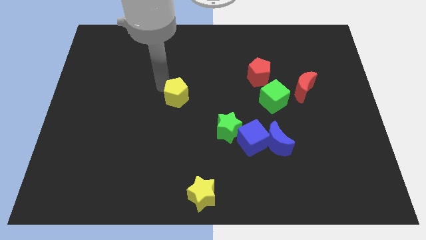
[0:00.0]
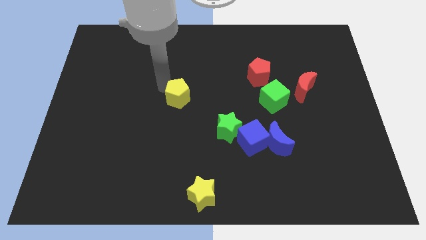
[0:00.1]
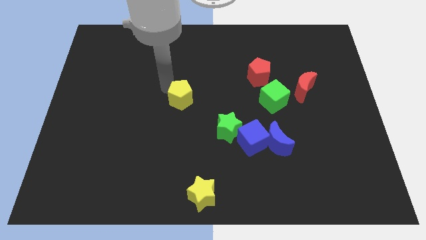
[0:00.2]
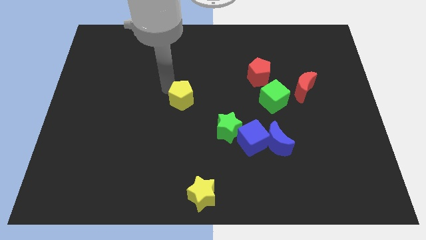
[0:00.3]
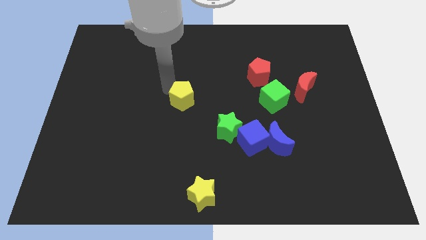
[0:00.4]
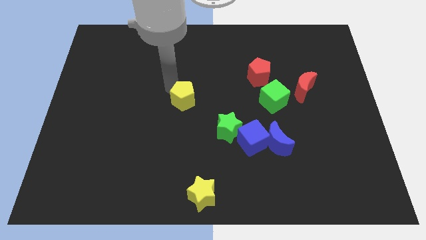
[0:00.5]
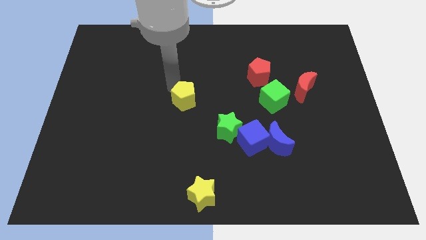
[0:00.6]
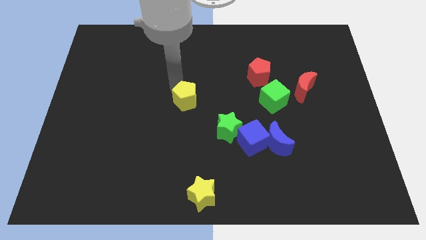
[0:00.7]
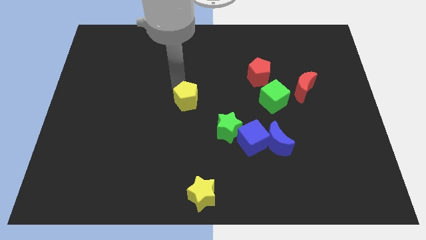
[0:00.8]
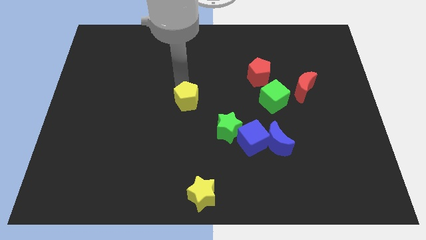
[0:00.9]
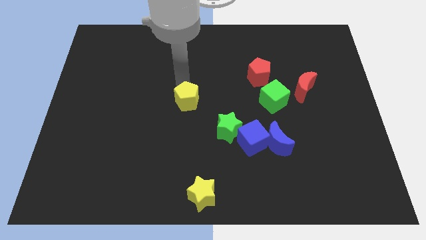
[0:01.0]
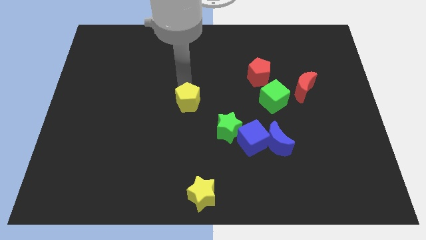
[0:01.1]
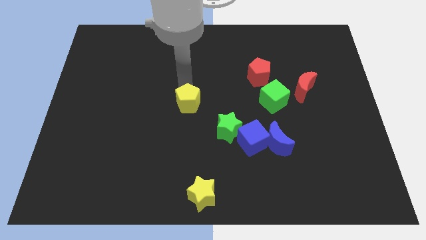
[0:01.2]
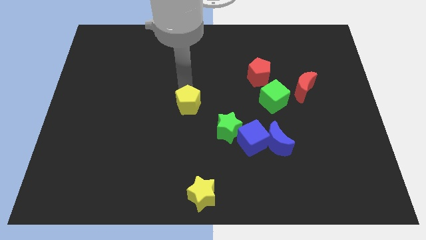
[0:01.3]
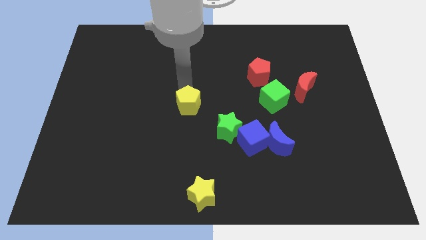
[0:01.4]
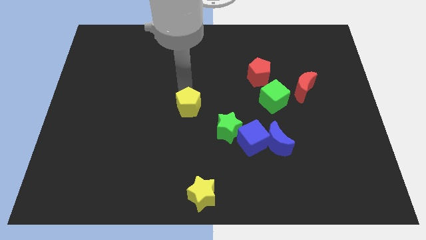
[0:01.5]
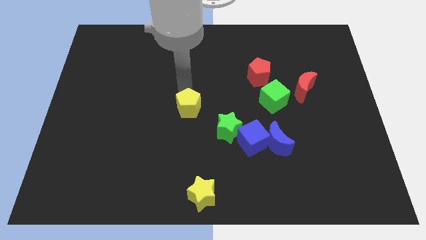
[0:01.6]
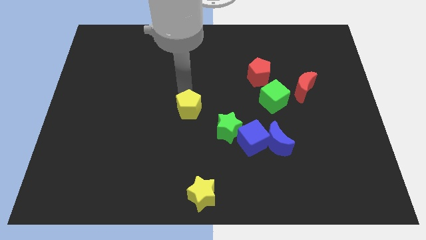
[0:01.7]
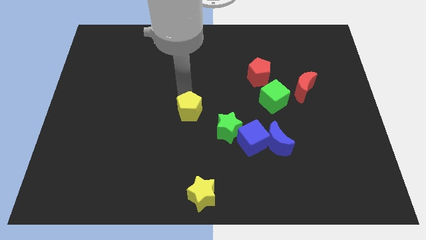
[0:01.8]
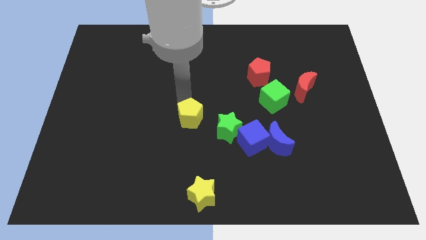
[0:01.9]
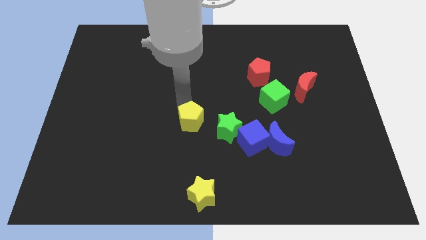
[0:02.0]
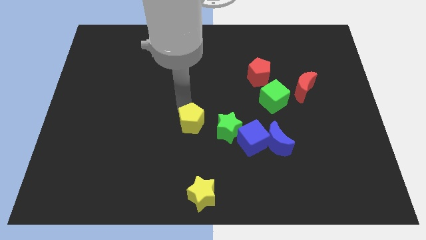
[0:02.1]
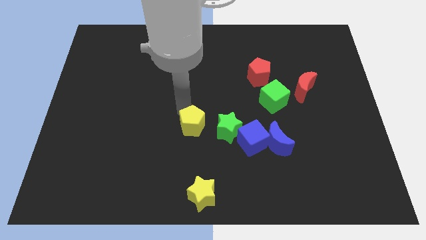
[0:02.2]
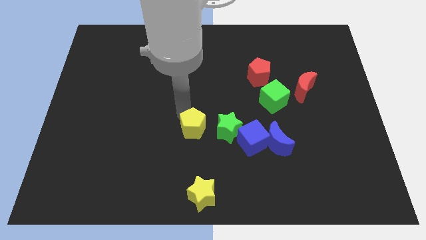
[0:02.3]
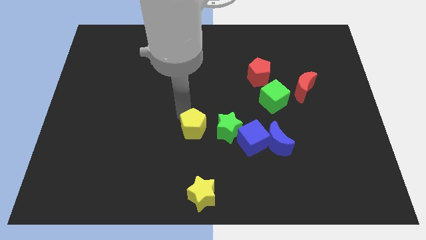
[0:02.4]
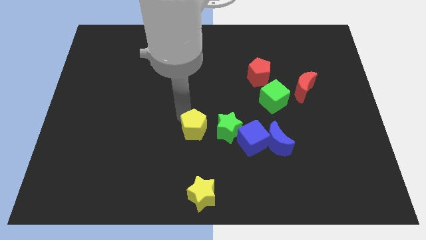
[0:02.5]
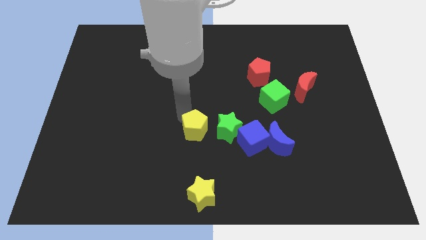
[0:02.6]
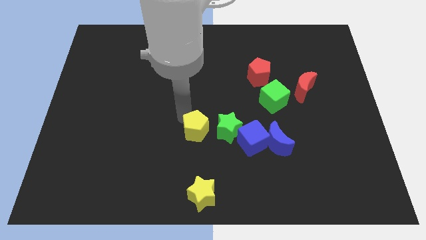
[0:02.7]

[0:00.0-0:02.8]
push the yellow pentagon left to the green star

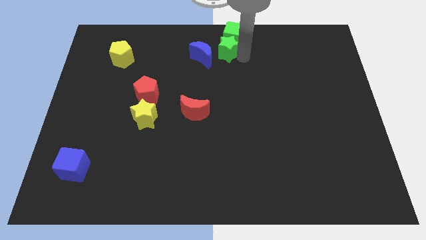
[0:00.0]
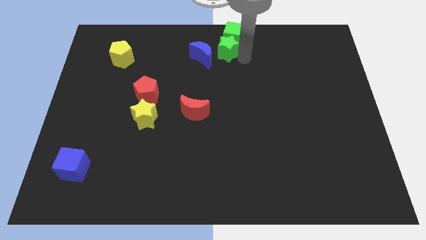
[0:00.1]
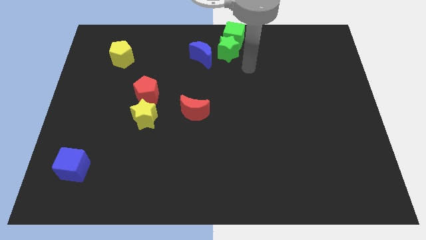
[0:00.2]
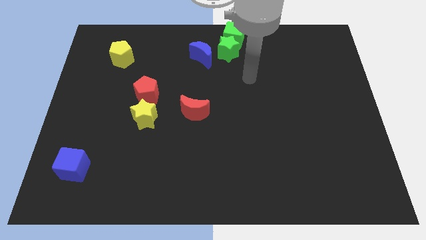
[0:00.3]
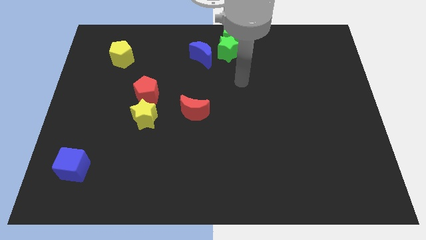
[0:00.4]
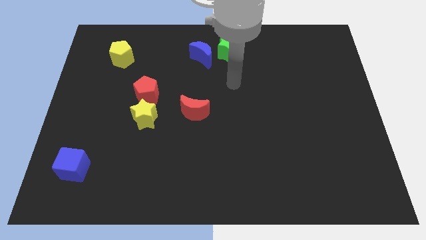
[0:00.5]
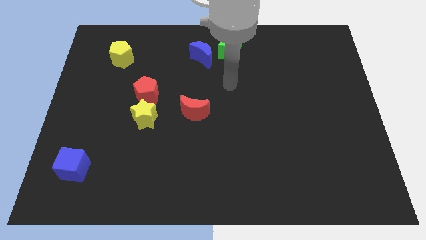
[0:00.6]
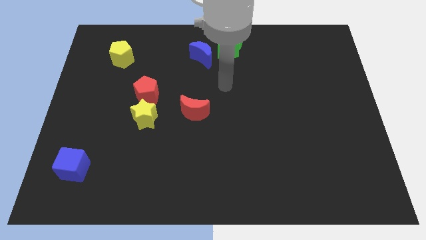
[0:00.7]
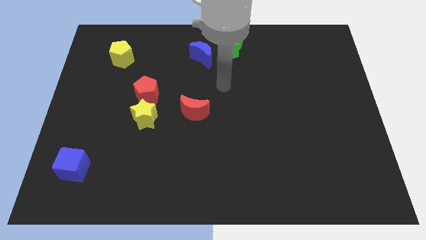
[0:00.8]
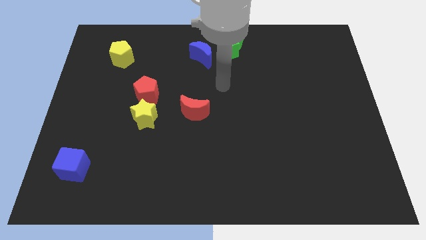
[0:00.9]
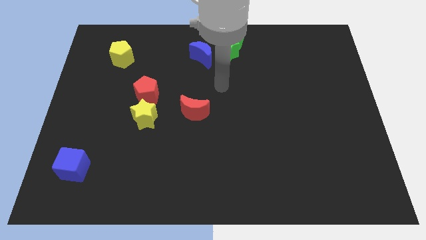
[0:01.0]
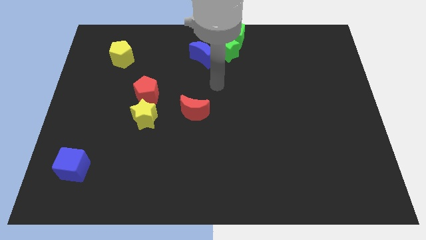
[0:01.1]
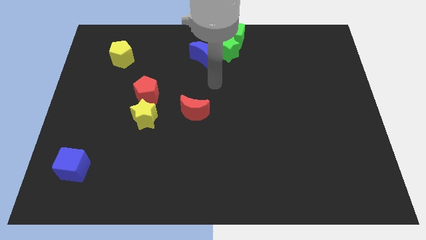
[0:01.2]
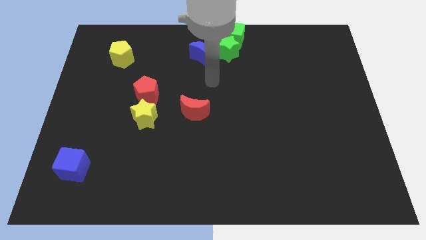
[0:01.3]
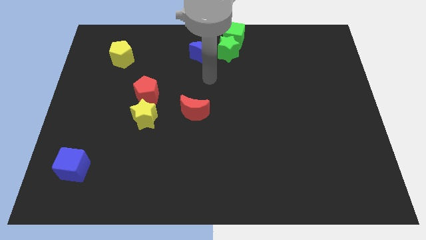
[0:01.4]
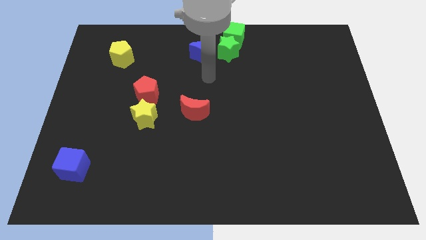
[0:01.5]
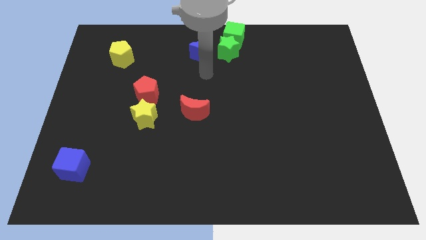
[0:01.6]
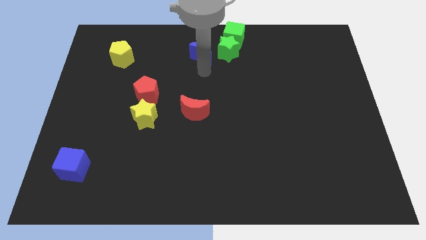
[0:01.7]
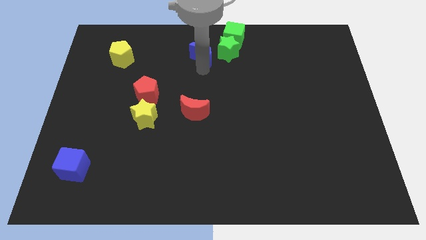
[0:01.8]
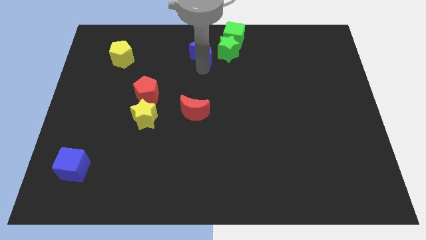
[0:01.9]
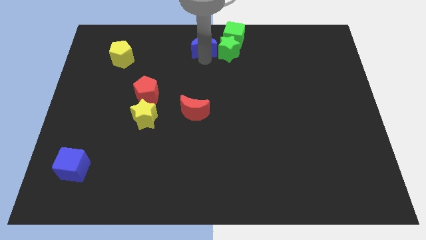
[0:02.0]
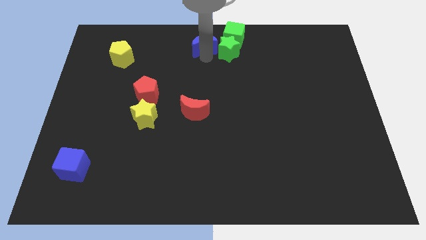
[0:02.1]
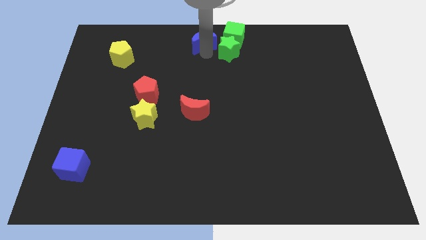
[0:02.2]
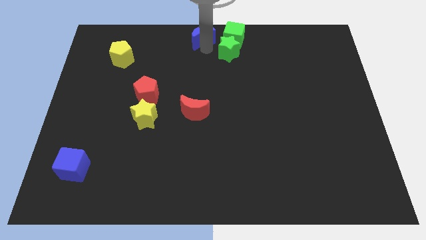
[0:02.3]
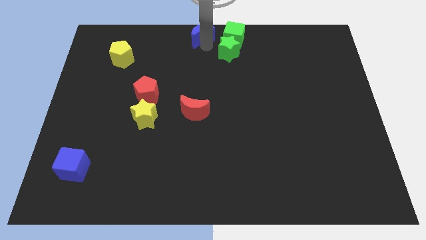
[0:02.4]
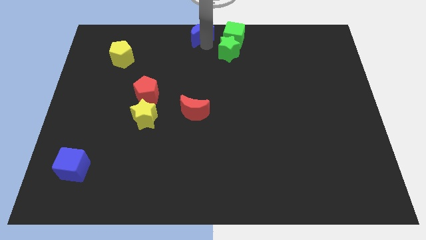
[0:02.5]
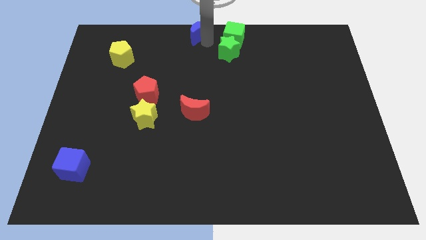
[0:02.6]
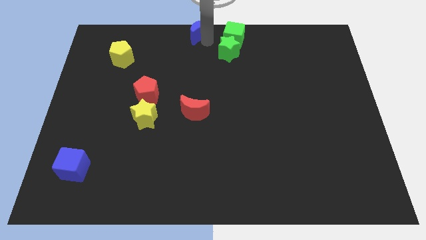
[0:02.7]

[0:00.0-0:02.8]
move the blue crescent towards the top side of the board

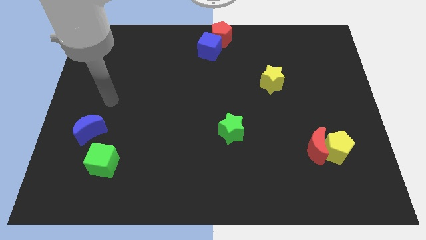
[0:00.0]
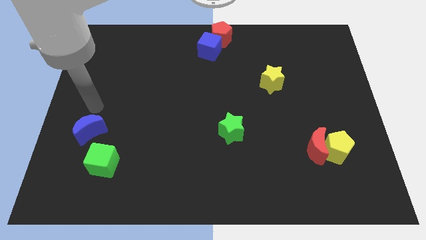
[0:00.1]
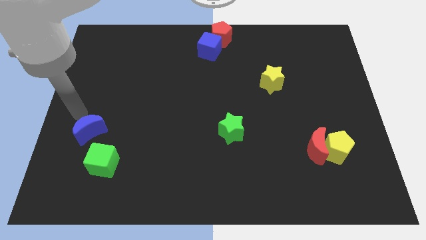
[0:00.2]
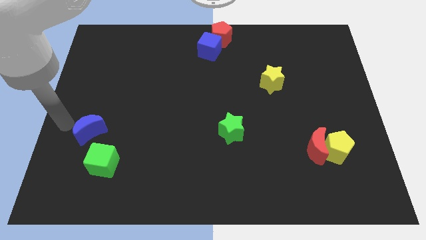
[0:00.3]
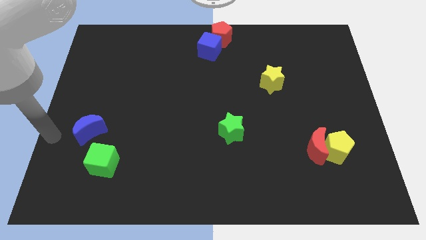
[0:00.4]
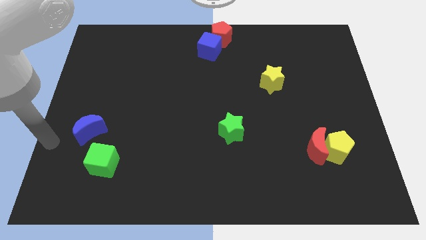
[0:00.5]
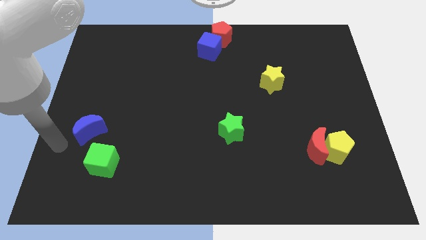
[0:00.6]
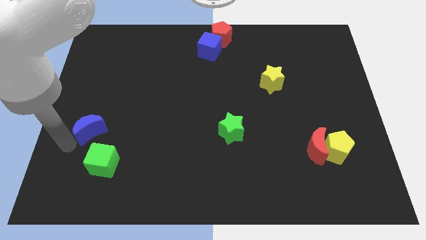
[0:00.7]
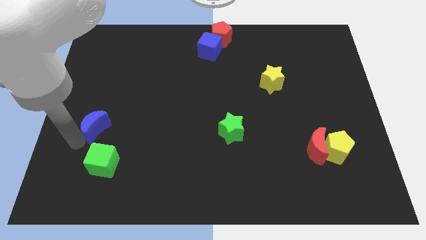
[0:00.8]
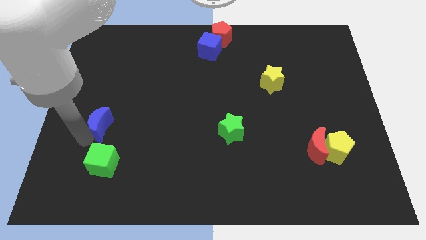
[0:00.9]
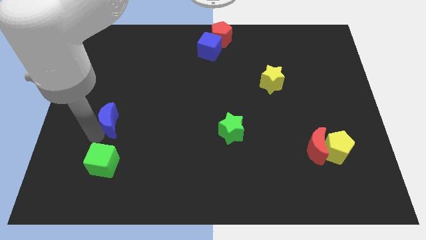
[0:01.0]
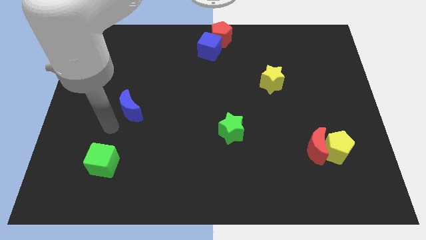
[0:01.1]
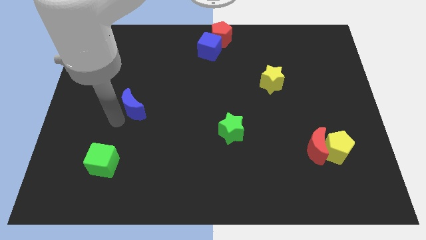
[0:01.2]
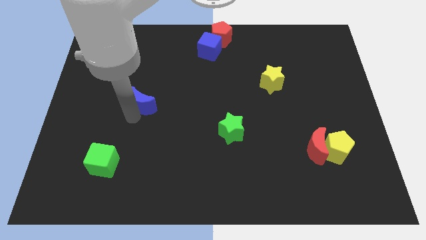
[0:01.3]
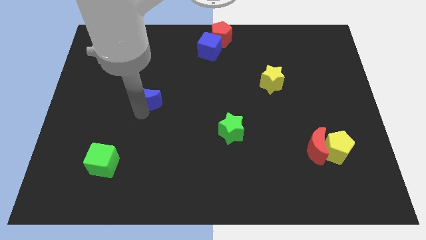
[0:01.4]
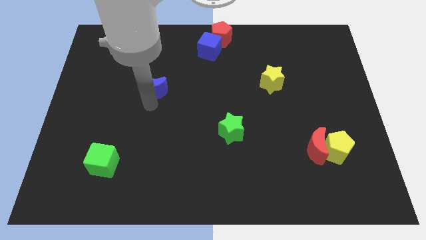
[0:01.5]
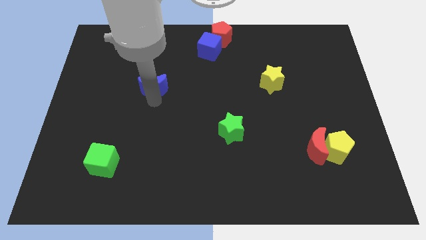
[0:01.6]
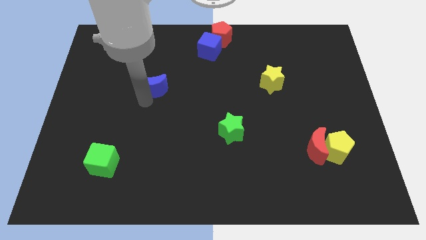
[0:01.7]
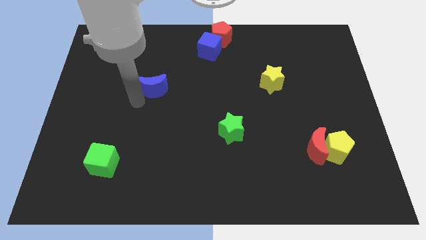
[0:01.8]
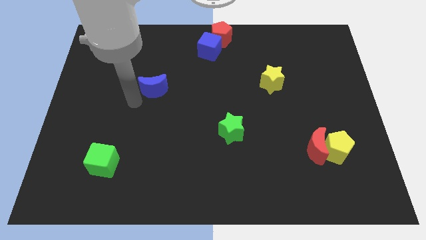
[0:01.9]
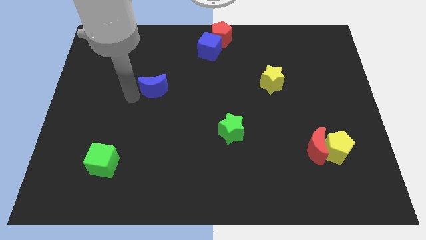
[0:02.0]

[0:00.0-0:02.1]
place blue moon to left of yellow star

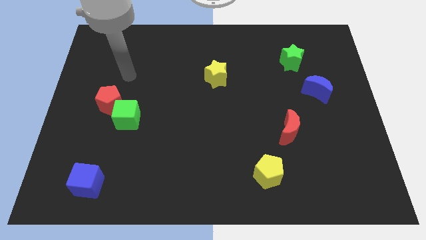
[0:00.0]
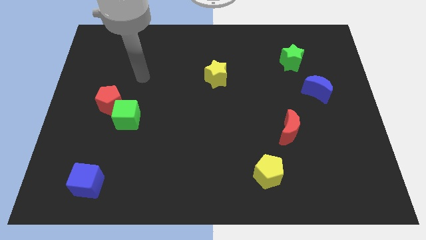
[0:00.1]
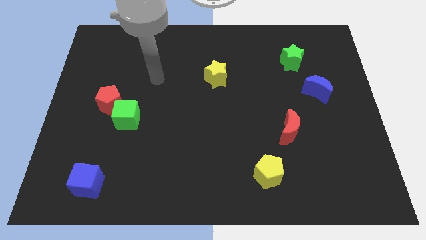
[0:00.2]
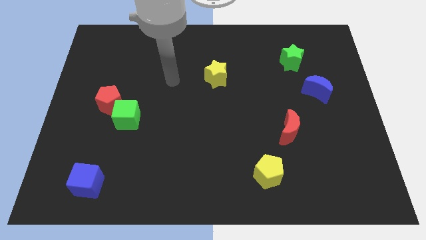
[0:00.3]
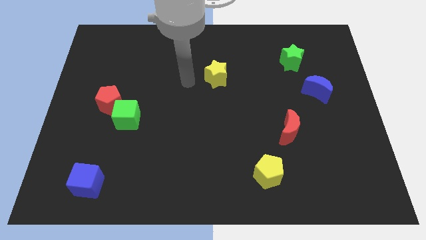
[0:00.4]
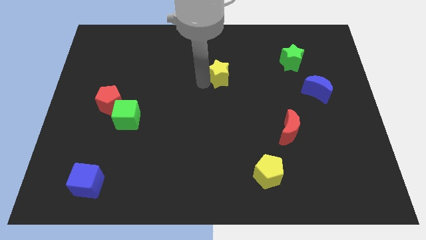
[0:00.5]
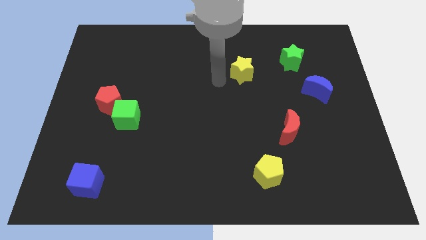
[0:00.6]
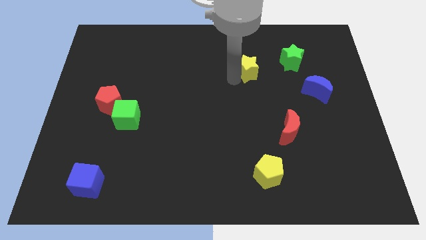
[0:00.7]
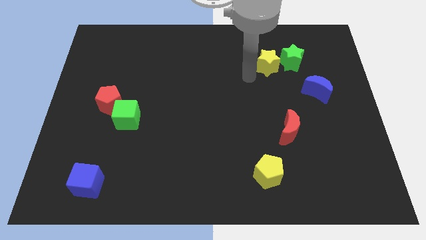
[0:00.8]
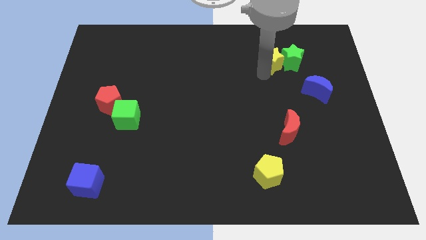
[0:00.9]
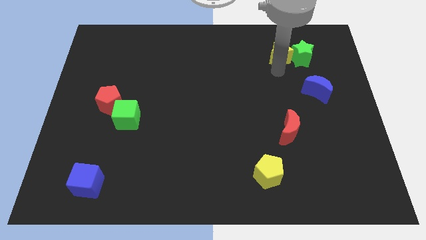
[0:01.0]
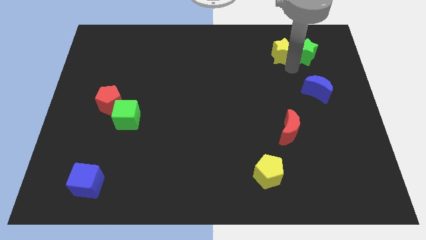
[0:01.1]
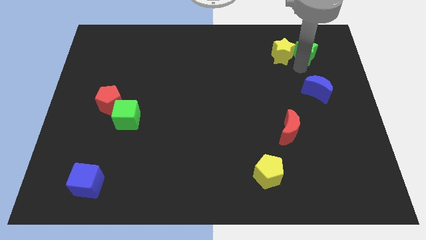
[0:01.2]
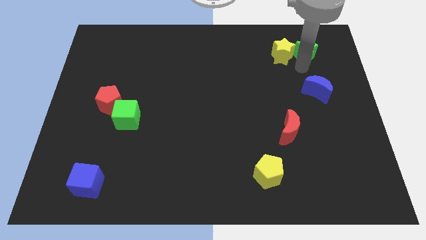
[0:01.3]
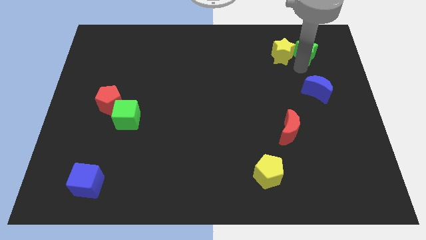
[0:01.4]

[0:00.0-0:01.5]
move the yellow star to the left of the green star
